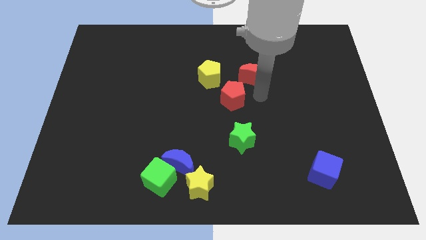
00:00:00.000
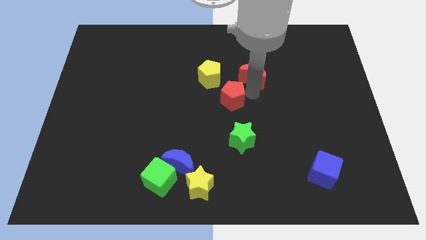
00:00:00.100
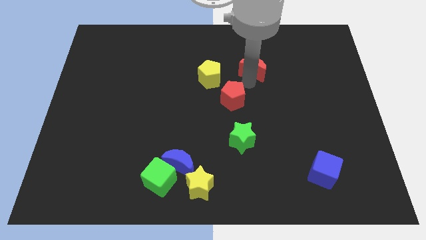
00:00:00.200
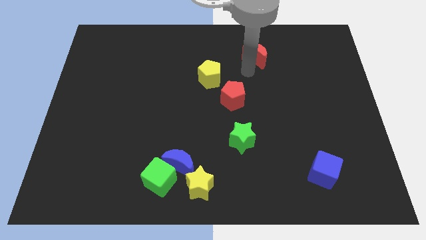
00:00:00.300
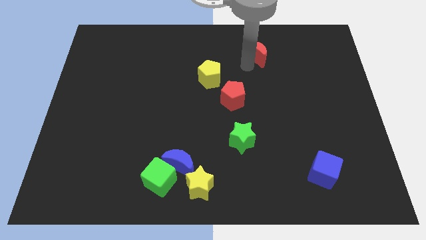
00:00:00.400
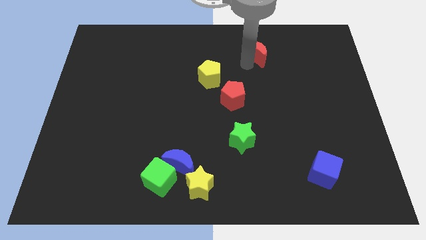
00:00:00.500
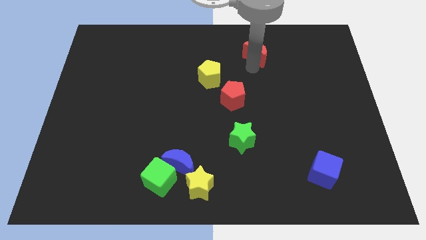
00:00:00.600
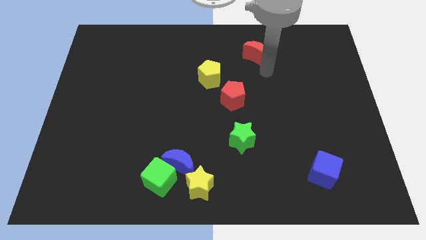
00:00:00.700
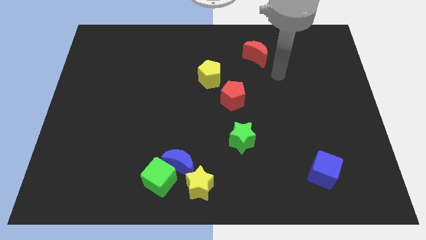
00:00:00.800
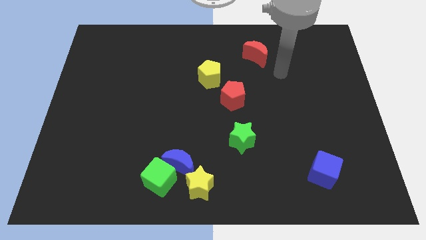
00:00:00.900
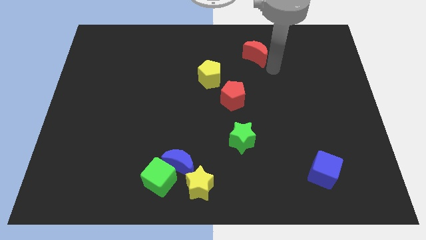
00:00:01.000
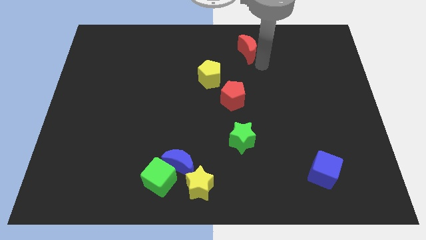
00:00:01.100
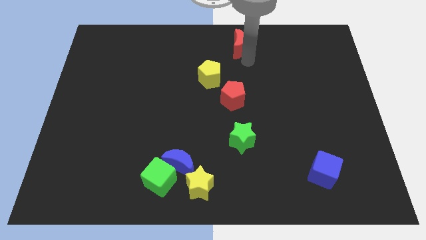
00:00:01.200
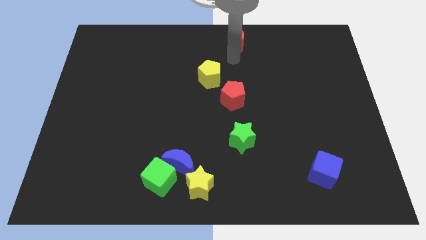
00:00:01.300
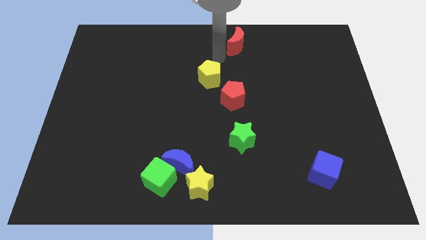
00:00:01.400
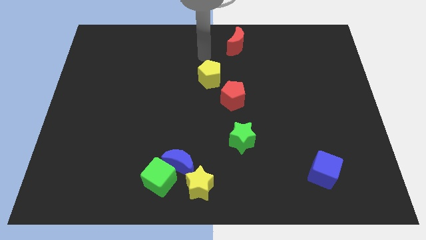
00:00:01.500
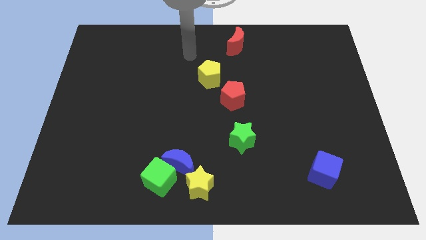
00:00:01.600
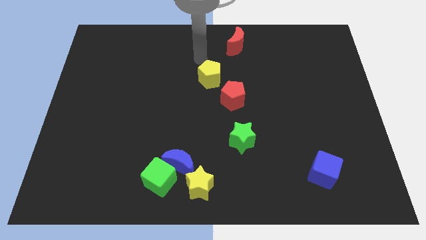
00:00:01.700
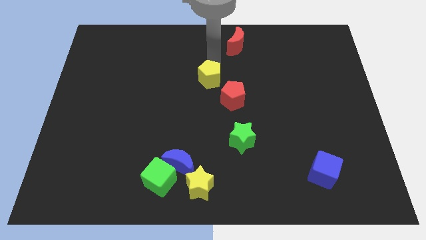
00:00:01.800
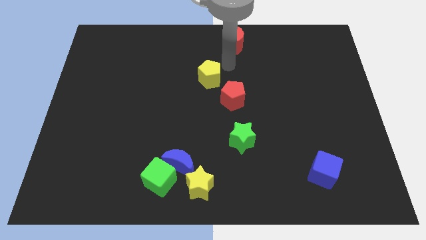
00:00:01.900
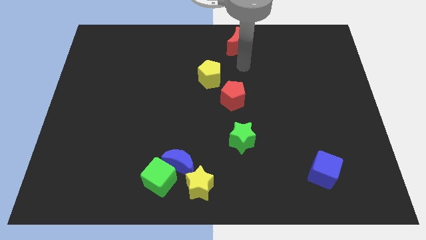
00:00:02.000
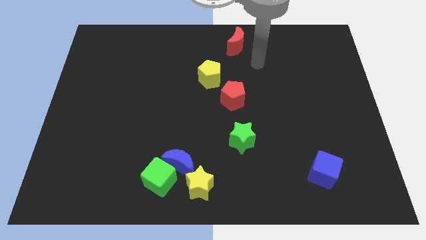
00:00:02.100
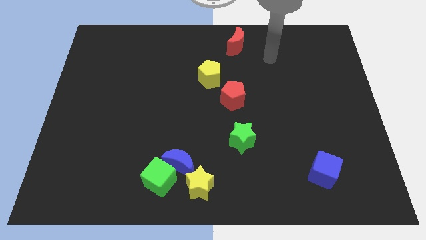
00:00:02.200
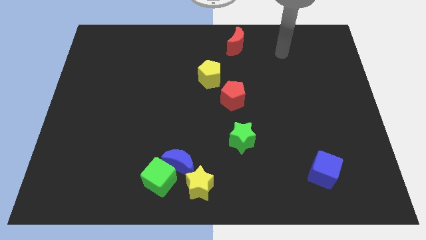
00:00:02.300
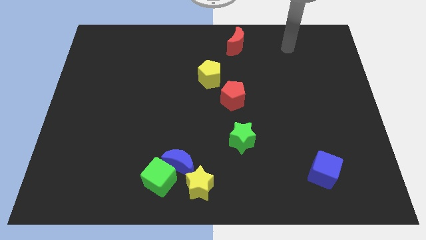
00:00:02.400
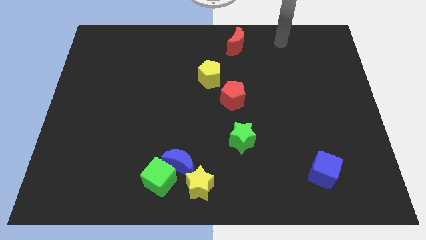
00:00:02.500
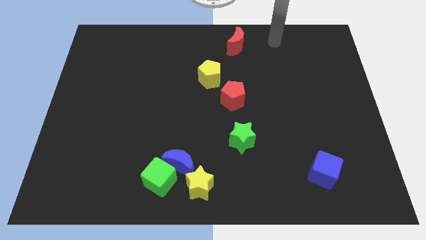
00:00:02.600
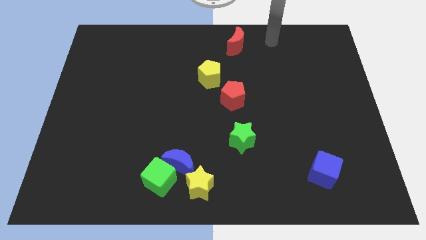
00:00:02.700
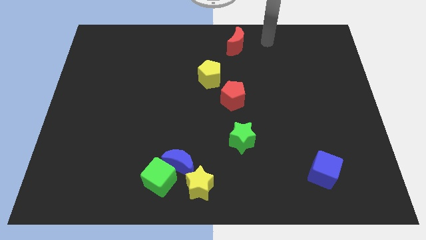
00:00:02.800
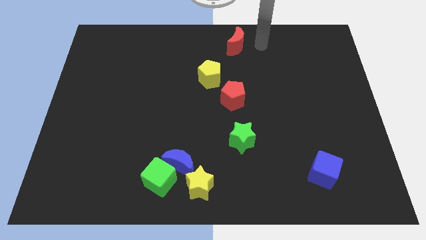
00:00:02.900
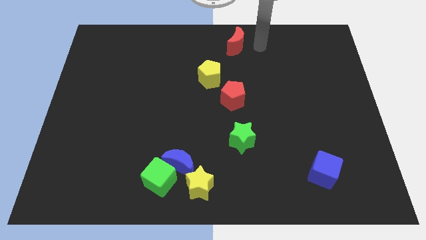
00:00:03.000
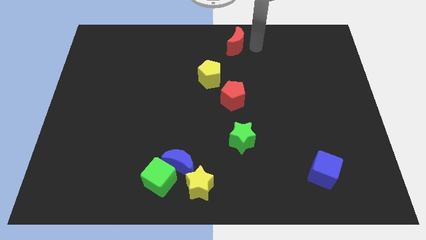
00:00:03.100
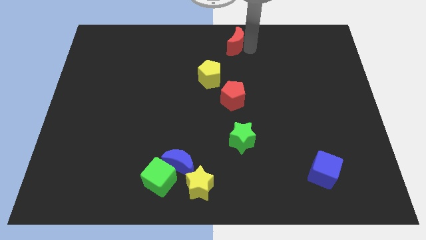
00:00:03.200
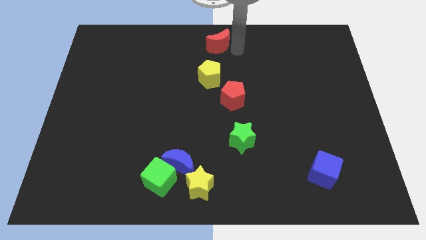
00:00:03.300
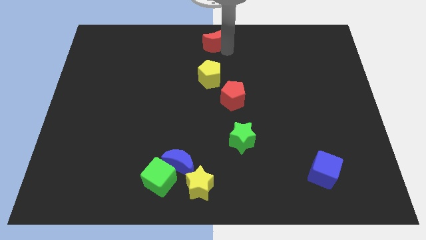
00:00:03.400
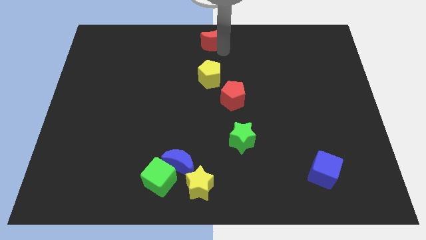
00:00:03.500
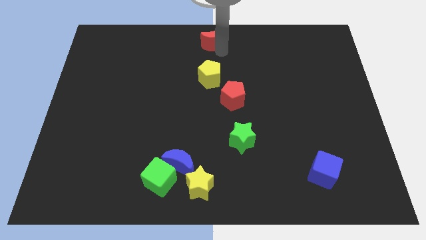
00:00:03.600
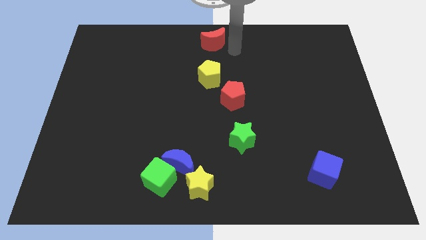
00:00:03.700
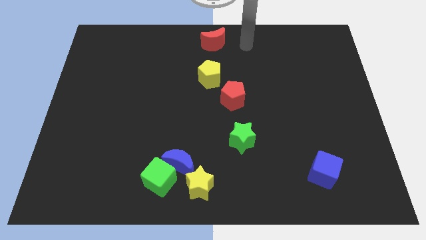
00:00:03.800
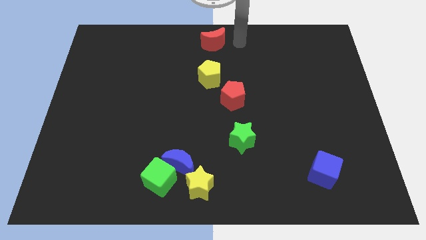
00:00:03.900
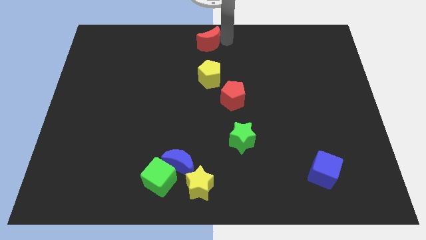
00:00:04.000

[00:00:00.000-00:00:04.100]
move the red crecent to the vertical top side of the yellow pentagon

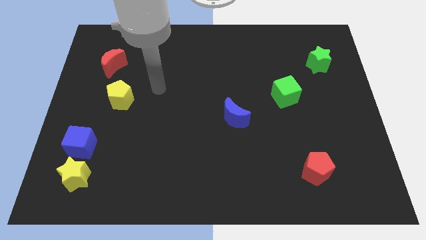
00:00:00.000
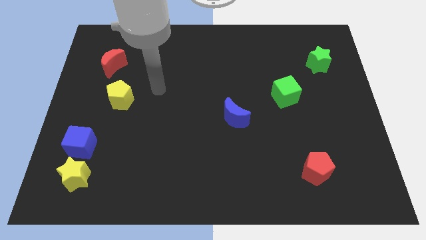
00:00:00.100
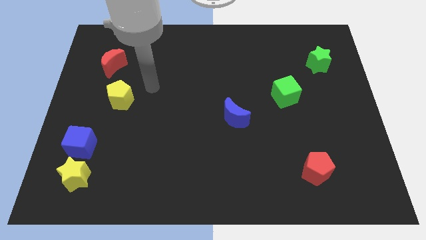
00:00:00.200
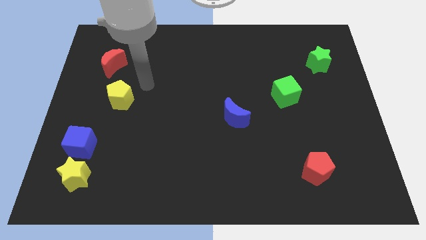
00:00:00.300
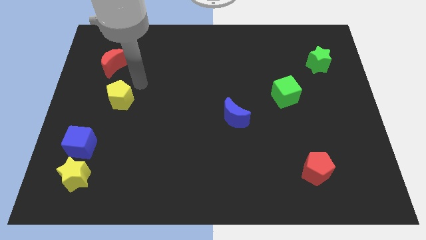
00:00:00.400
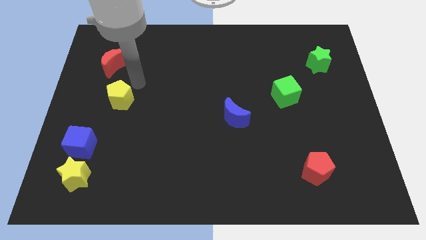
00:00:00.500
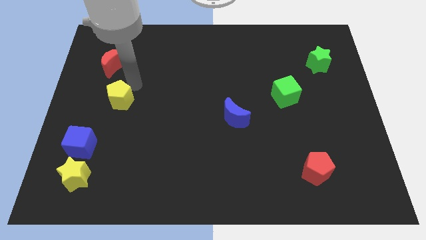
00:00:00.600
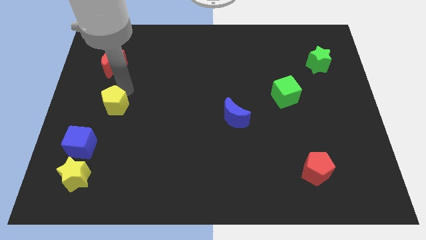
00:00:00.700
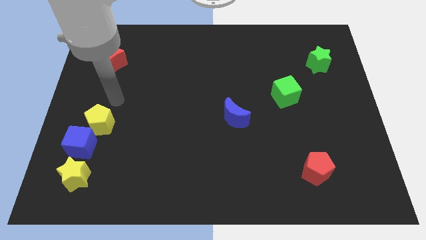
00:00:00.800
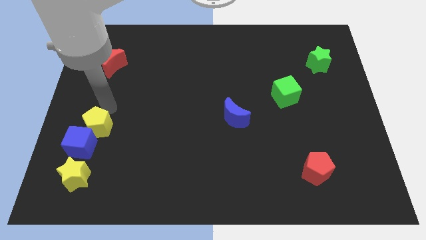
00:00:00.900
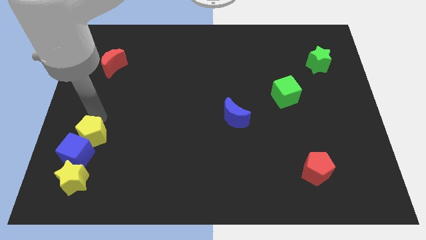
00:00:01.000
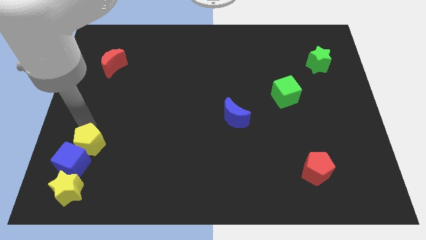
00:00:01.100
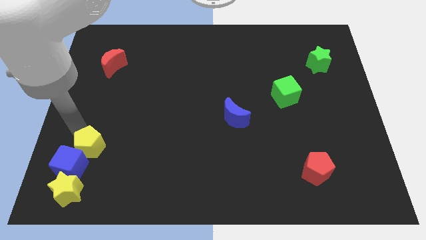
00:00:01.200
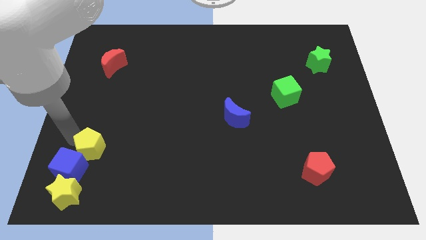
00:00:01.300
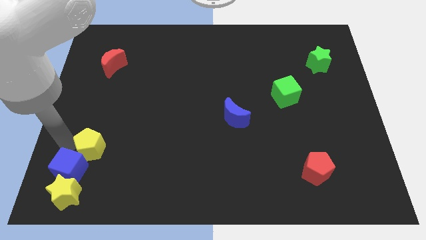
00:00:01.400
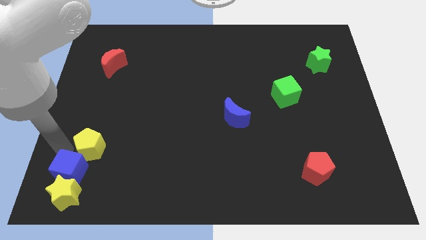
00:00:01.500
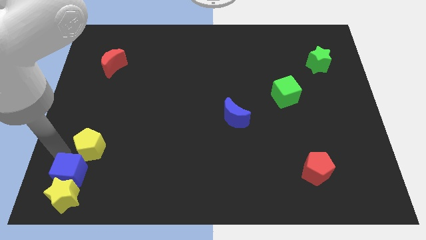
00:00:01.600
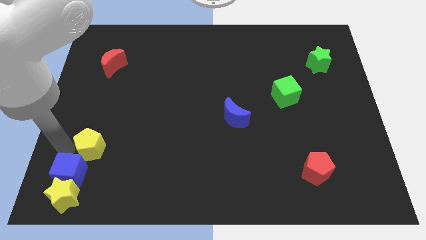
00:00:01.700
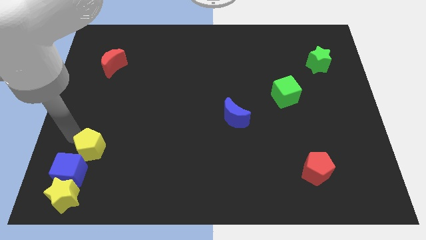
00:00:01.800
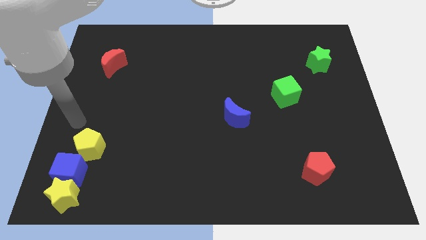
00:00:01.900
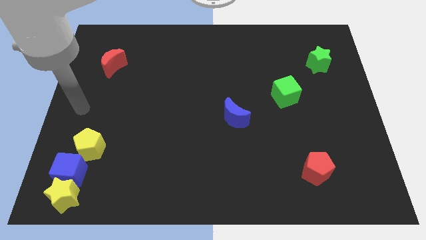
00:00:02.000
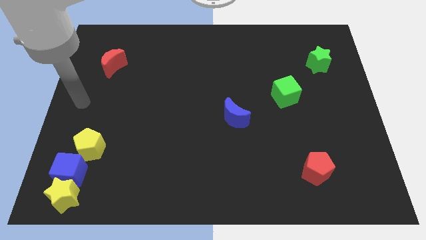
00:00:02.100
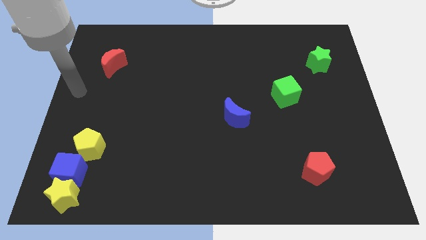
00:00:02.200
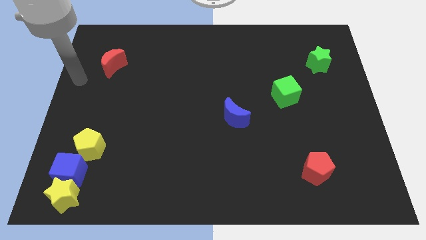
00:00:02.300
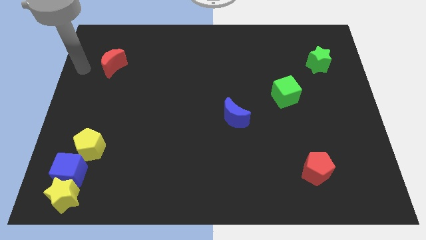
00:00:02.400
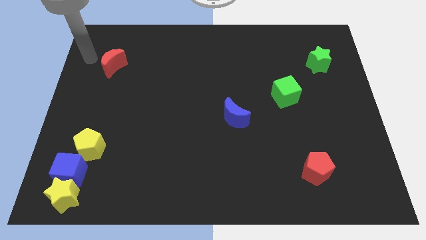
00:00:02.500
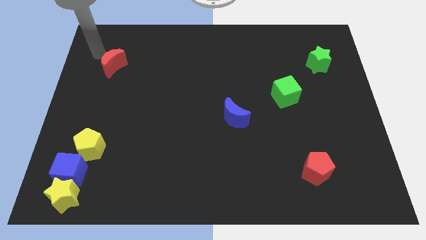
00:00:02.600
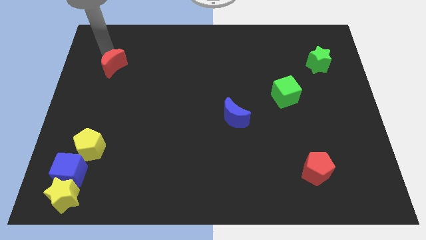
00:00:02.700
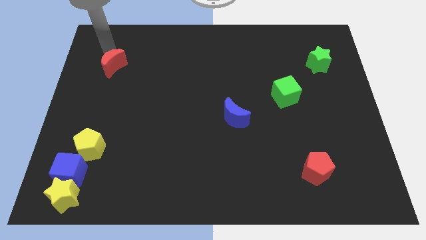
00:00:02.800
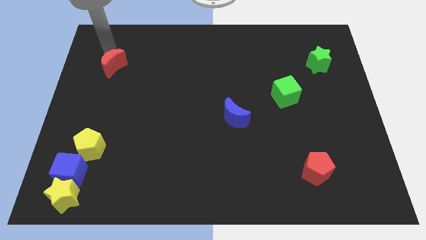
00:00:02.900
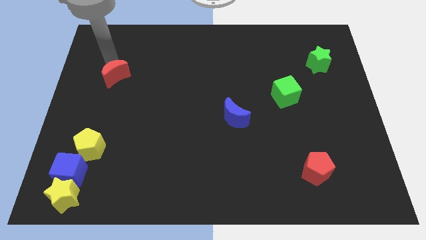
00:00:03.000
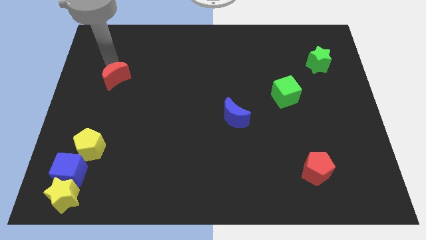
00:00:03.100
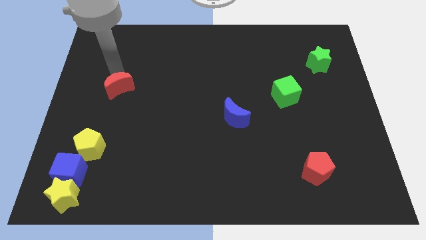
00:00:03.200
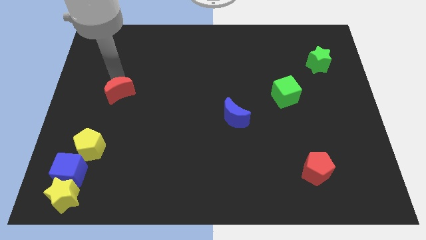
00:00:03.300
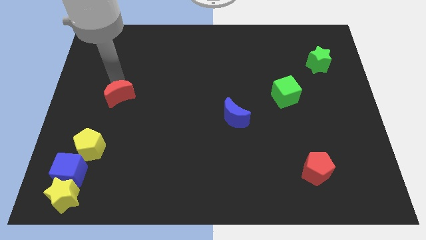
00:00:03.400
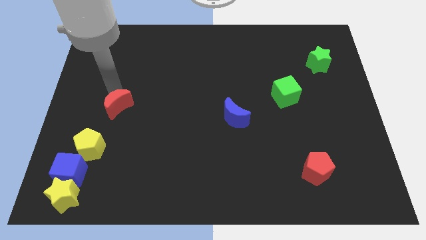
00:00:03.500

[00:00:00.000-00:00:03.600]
place red pentagon to the top right of yellow pentagon

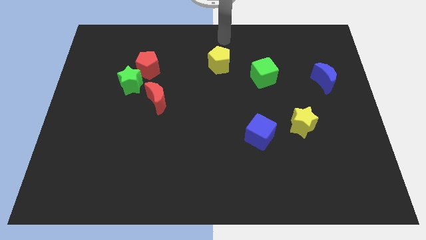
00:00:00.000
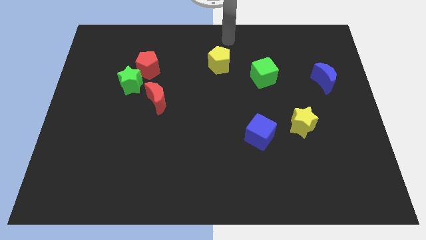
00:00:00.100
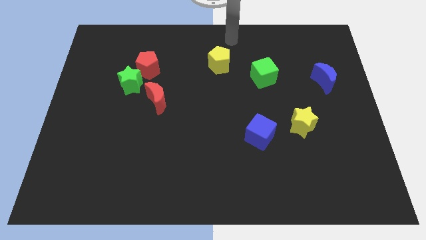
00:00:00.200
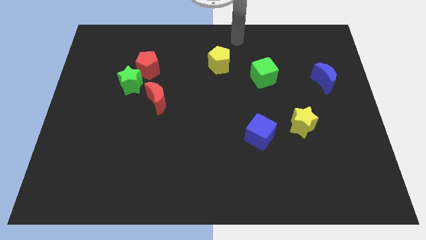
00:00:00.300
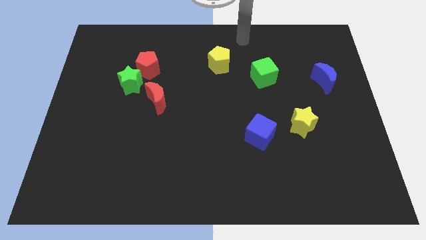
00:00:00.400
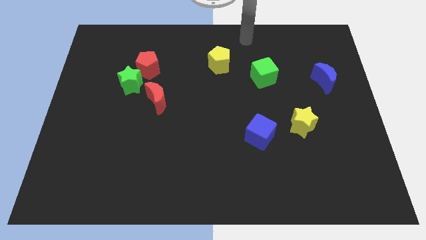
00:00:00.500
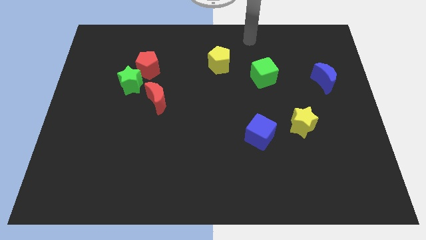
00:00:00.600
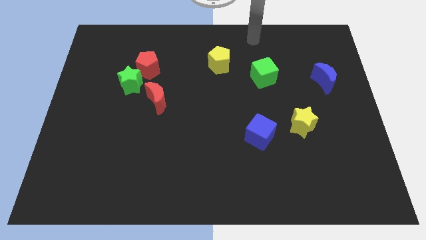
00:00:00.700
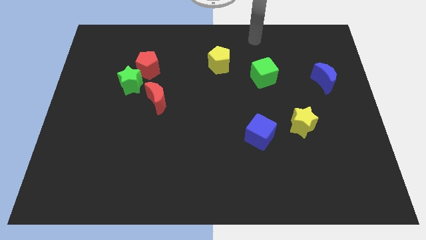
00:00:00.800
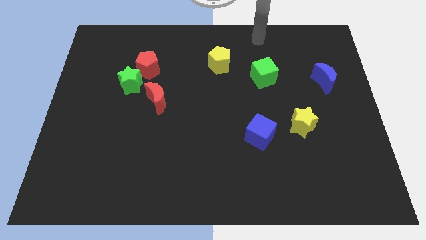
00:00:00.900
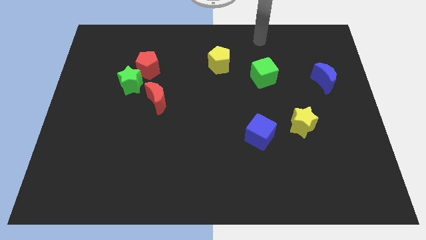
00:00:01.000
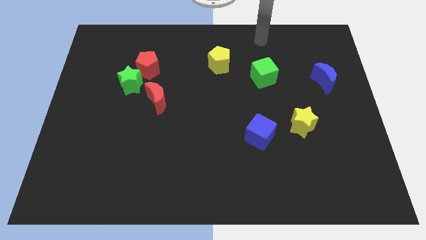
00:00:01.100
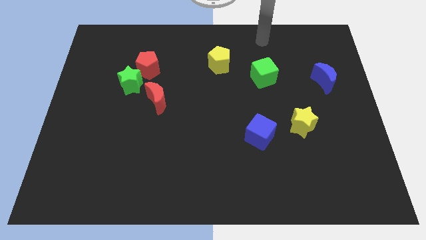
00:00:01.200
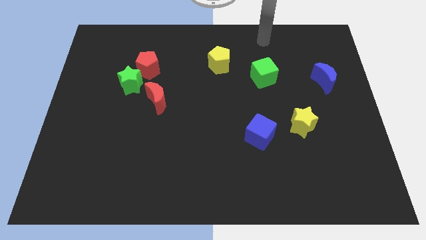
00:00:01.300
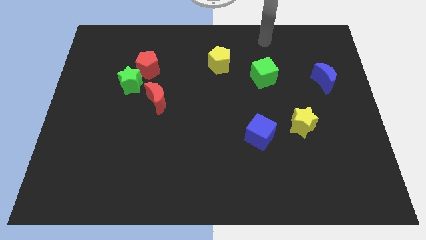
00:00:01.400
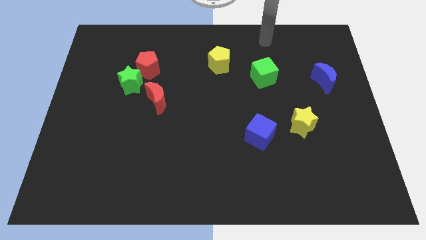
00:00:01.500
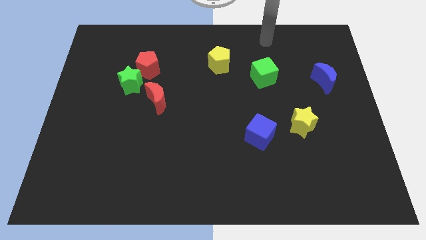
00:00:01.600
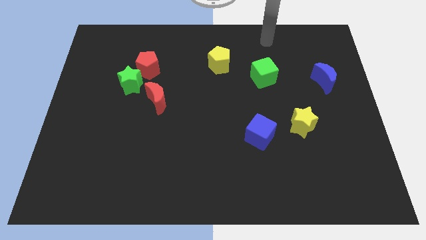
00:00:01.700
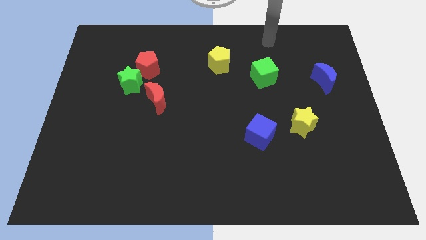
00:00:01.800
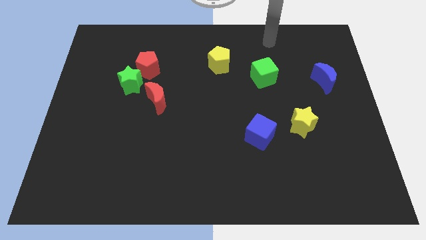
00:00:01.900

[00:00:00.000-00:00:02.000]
move arm to the top of green cube
